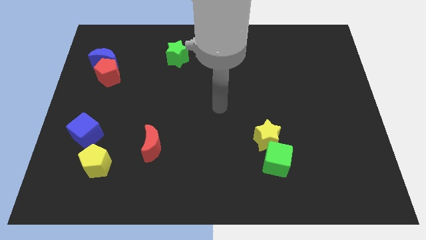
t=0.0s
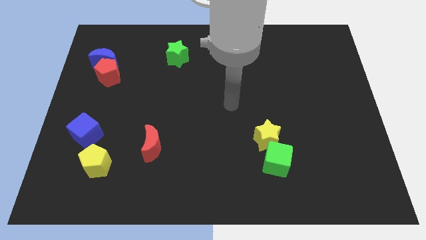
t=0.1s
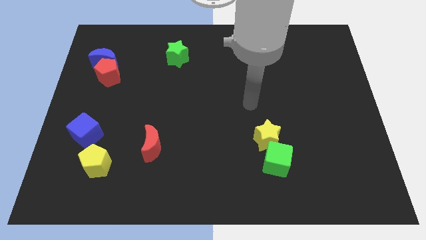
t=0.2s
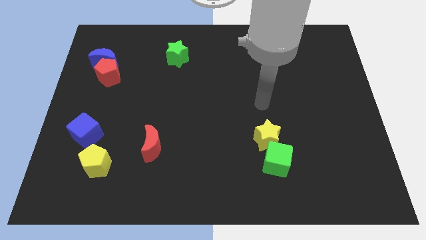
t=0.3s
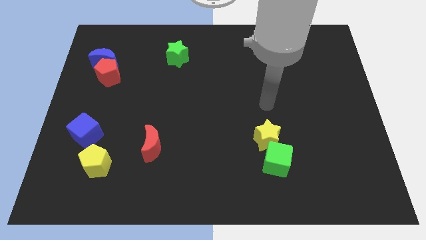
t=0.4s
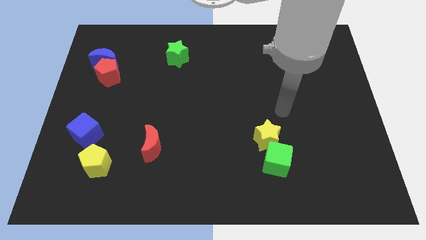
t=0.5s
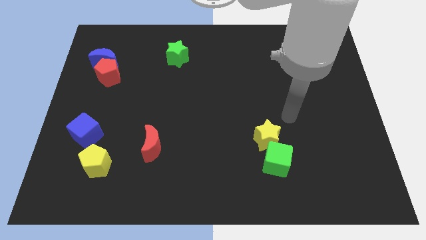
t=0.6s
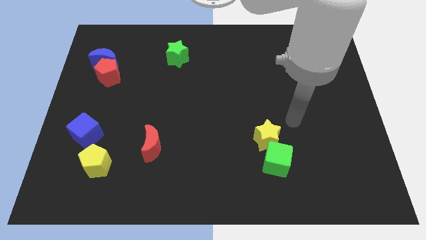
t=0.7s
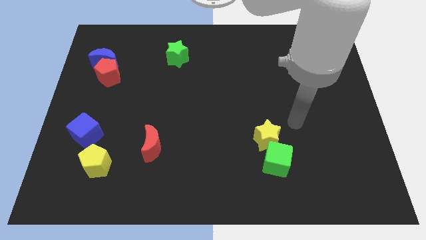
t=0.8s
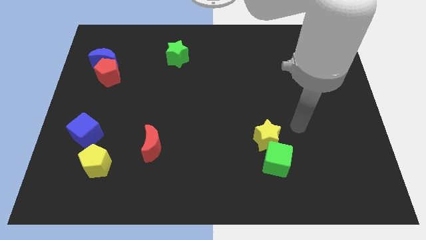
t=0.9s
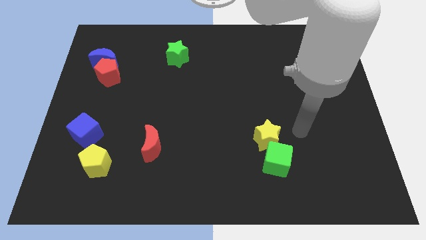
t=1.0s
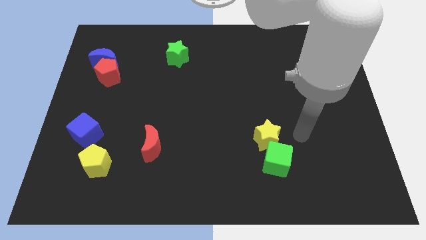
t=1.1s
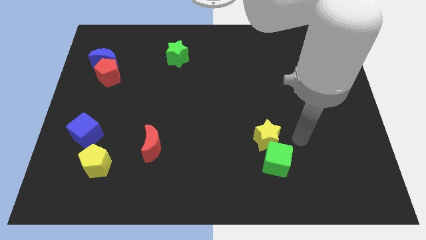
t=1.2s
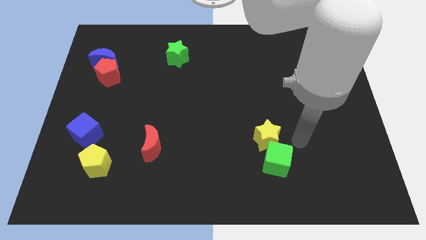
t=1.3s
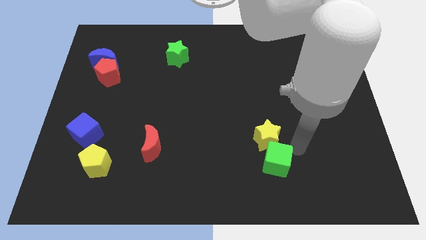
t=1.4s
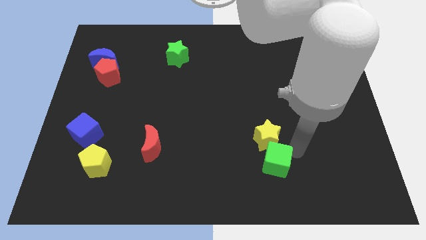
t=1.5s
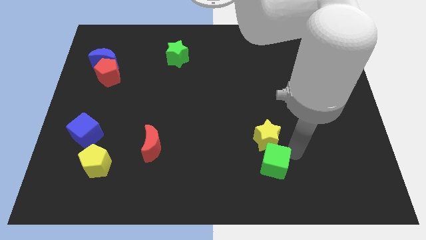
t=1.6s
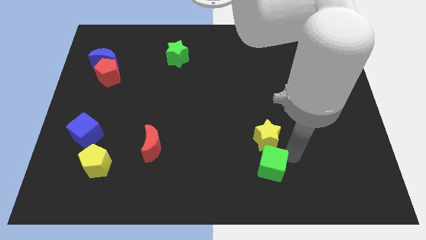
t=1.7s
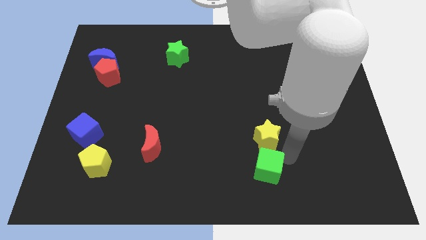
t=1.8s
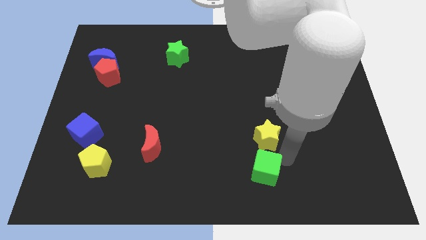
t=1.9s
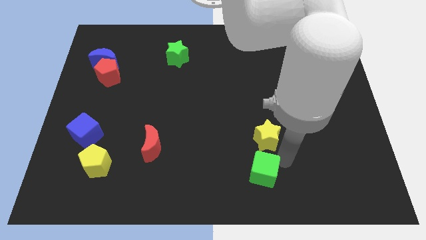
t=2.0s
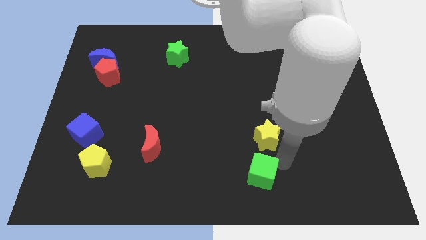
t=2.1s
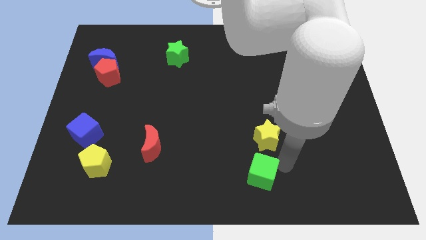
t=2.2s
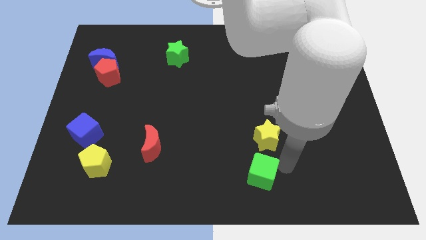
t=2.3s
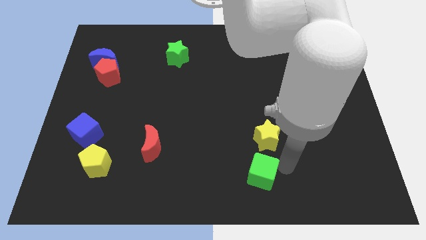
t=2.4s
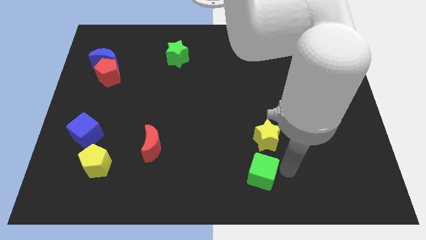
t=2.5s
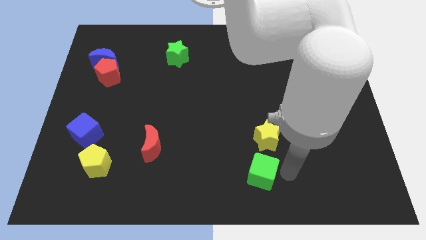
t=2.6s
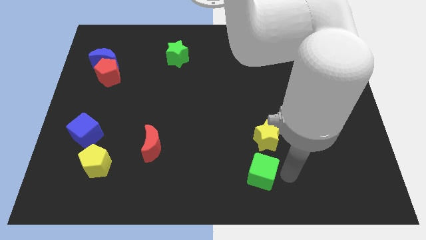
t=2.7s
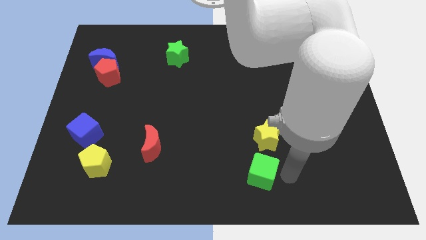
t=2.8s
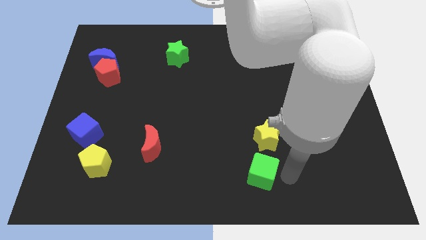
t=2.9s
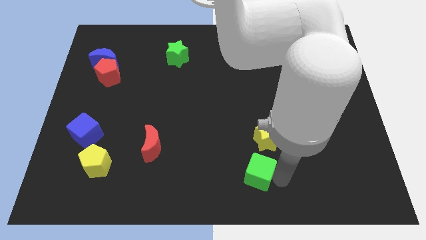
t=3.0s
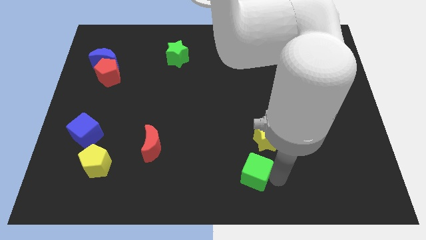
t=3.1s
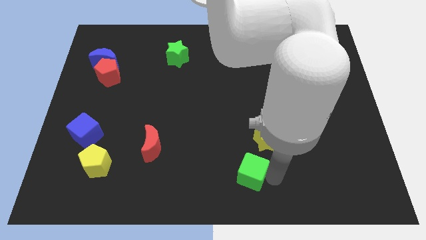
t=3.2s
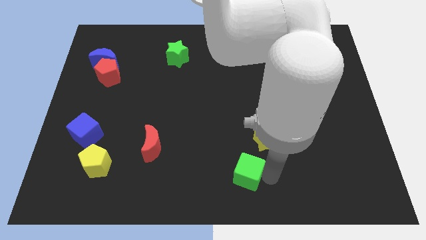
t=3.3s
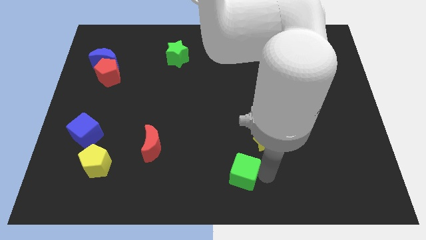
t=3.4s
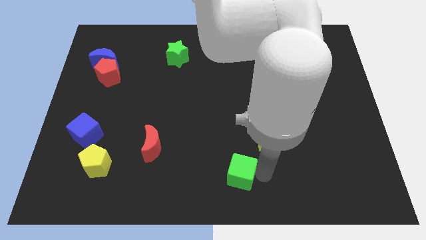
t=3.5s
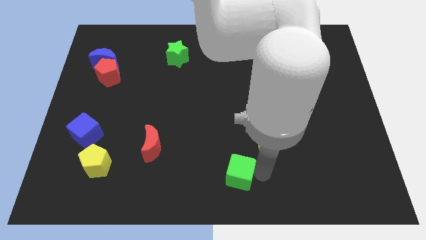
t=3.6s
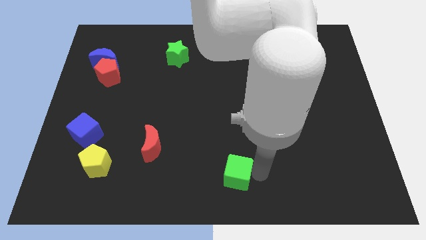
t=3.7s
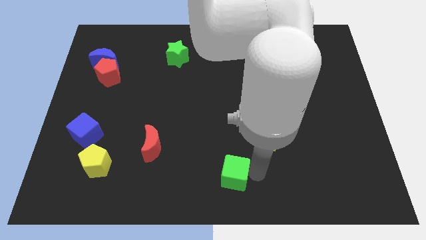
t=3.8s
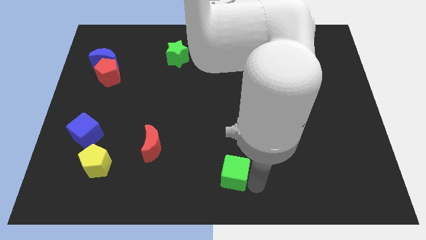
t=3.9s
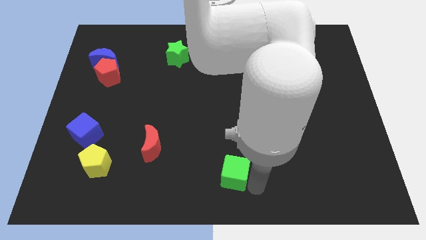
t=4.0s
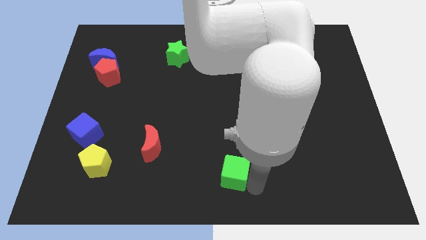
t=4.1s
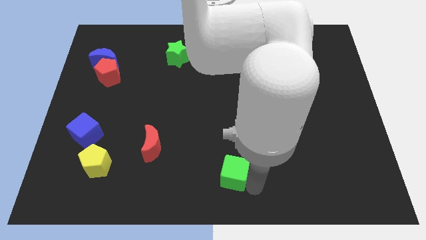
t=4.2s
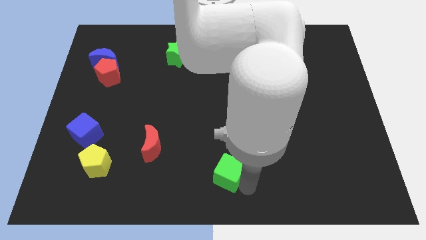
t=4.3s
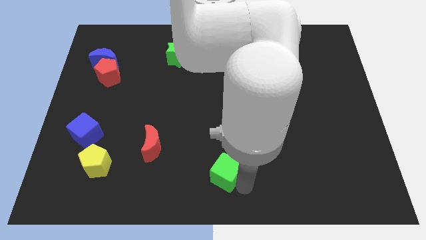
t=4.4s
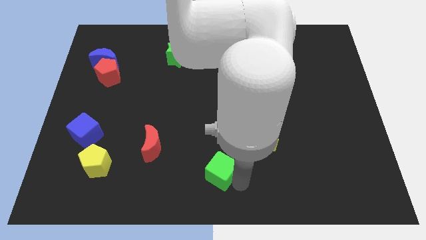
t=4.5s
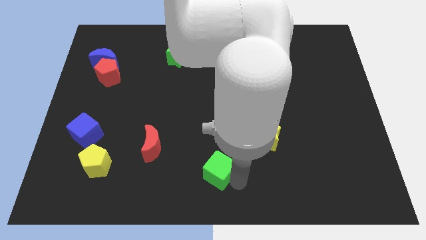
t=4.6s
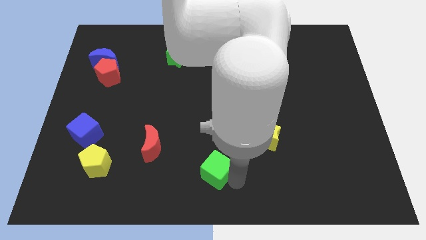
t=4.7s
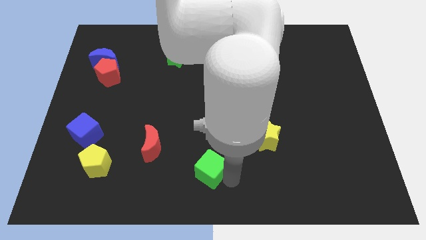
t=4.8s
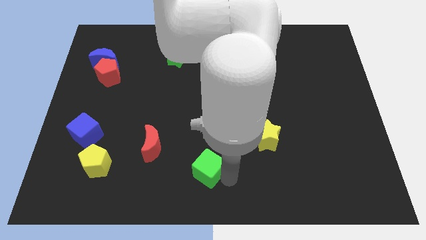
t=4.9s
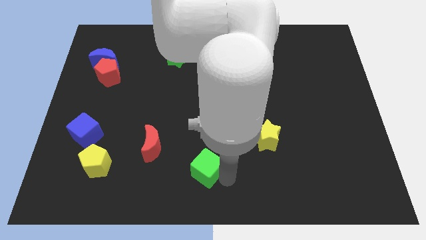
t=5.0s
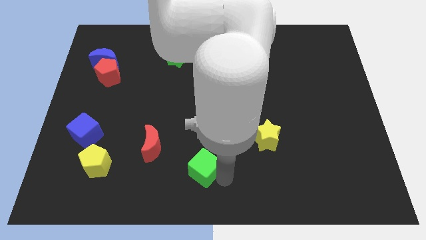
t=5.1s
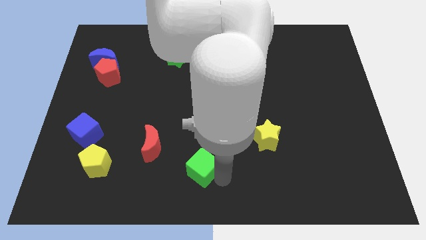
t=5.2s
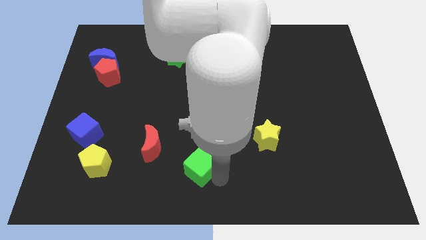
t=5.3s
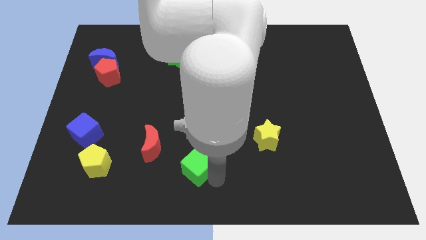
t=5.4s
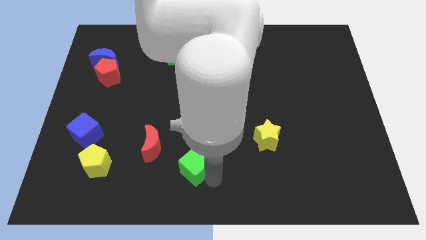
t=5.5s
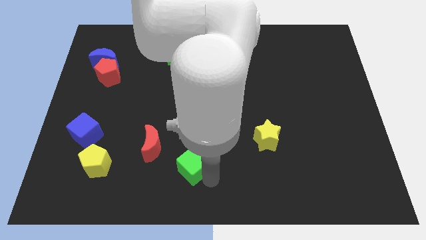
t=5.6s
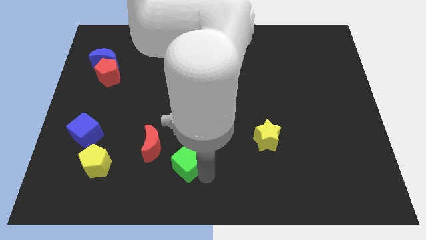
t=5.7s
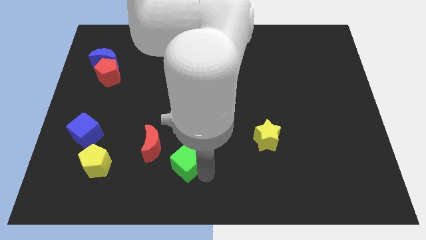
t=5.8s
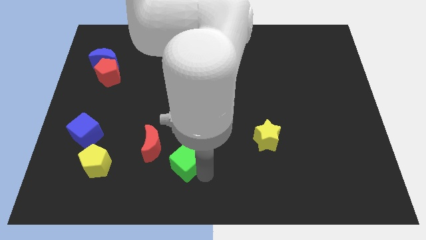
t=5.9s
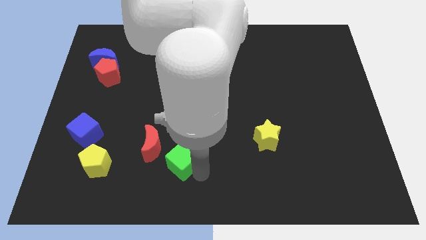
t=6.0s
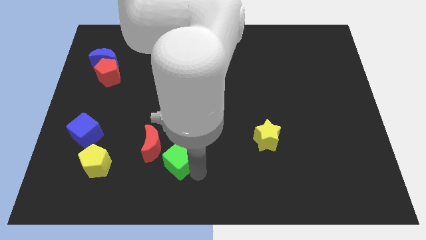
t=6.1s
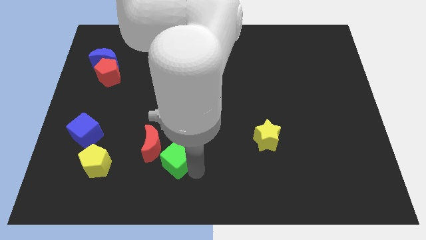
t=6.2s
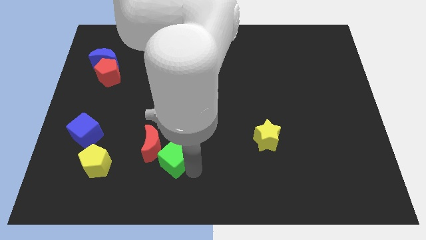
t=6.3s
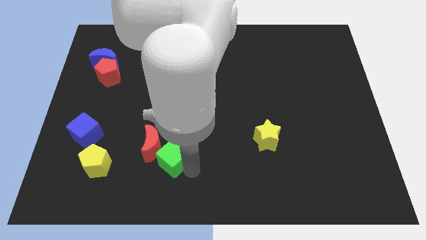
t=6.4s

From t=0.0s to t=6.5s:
slide the green cube towards the red moon

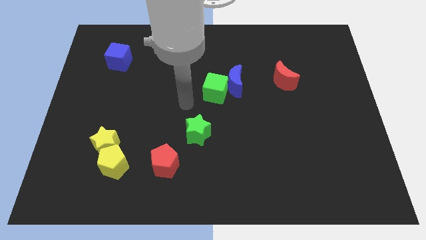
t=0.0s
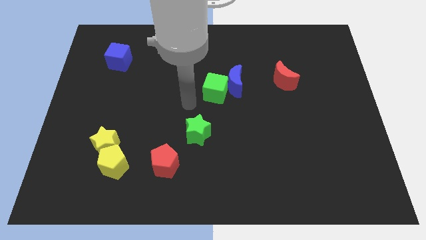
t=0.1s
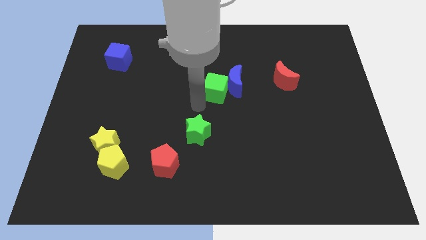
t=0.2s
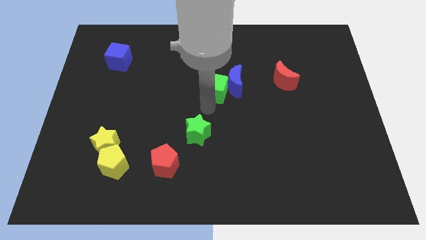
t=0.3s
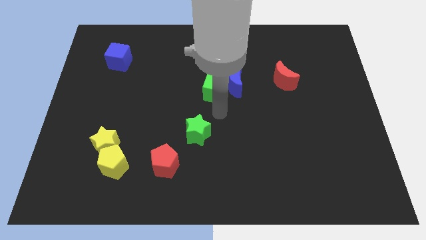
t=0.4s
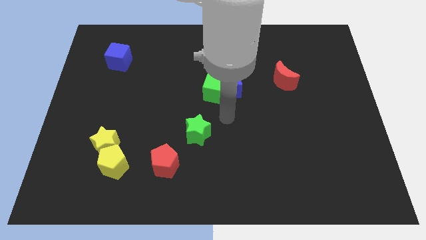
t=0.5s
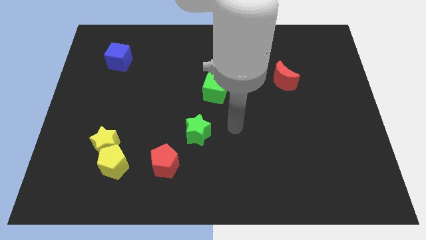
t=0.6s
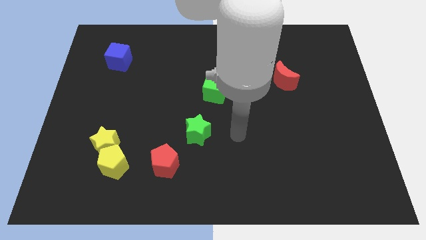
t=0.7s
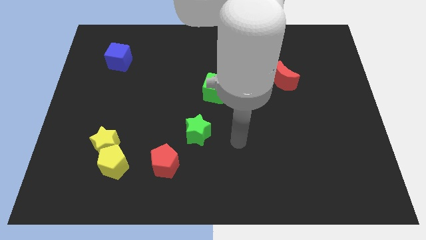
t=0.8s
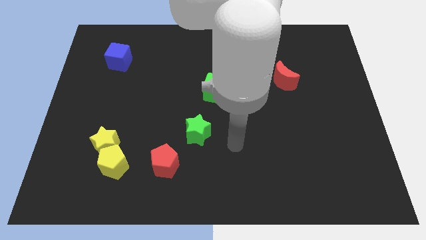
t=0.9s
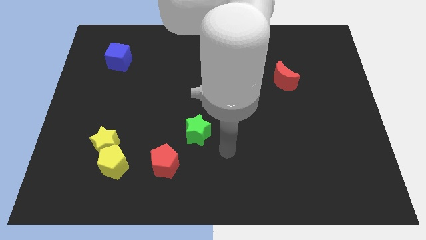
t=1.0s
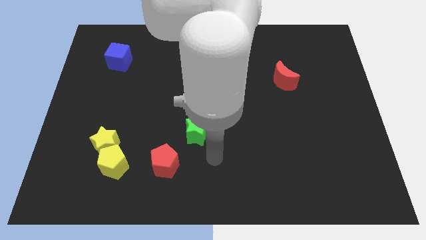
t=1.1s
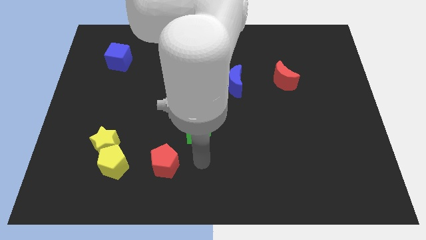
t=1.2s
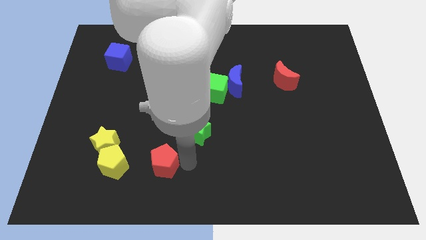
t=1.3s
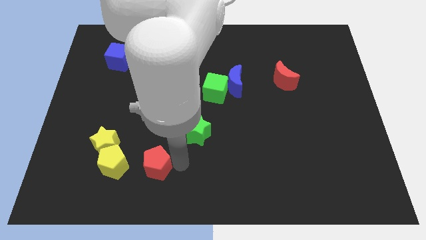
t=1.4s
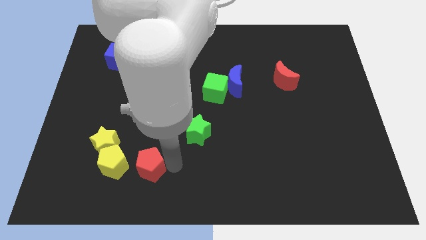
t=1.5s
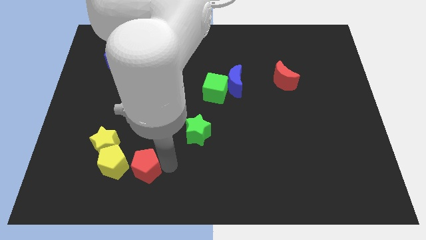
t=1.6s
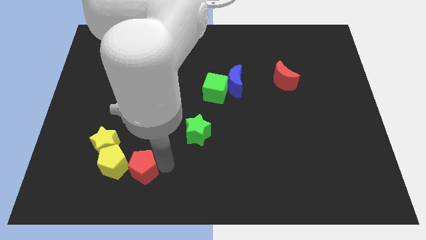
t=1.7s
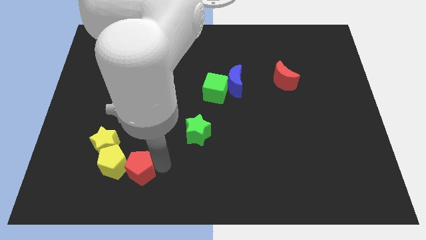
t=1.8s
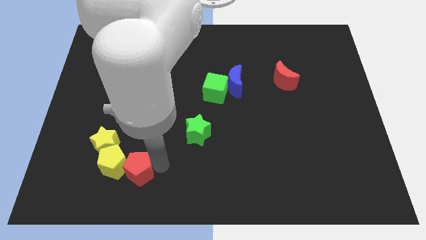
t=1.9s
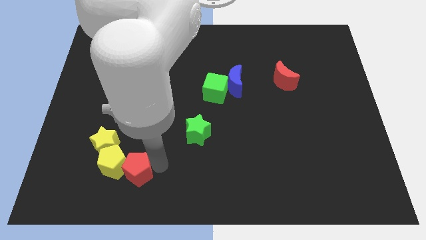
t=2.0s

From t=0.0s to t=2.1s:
put the red pentagon to the yellow pentagon

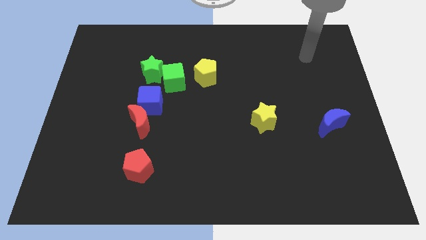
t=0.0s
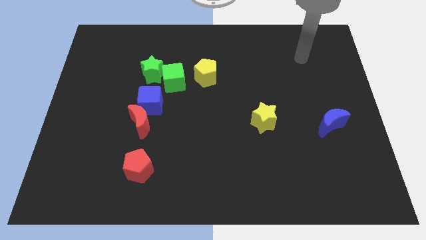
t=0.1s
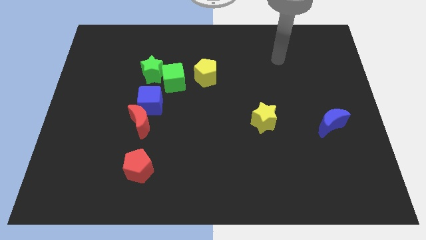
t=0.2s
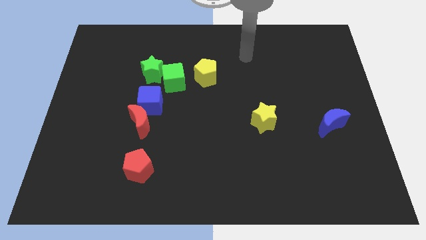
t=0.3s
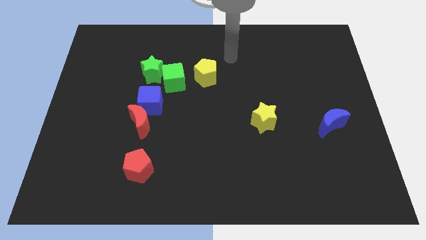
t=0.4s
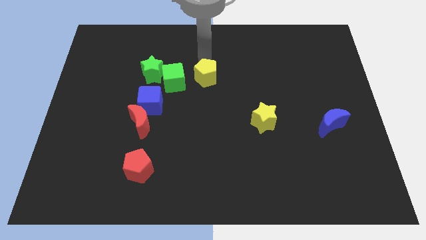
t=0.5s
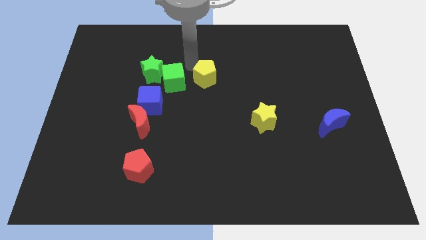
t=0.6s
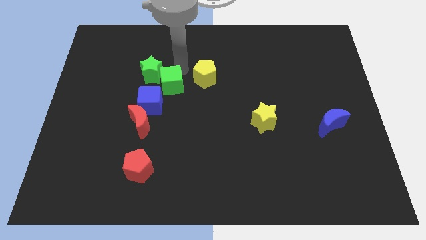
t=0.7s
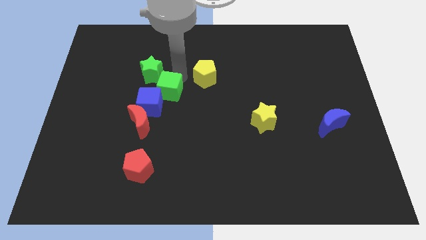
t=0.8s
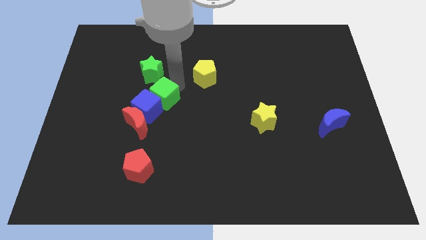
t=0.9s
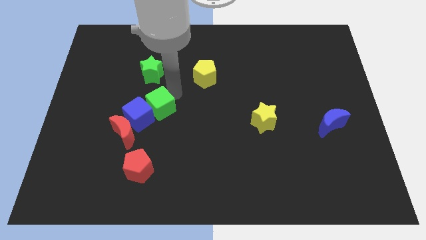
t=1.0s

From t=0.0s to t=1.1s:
put the green cube close to the blue cube
